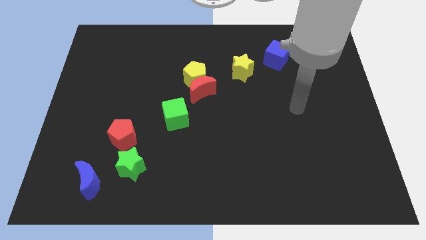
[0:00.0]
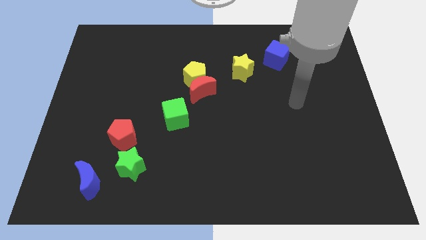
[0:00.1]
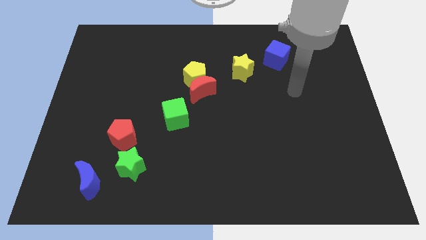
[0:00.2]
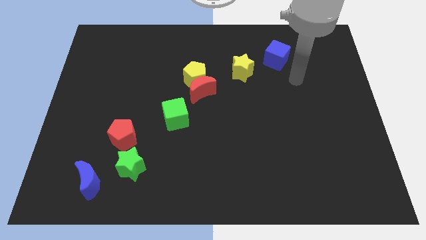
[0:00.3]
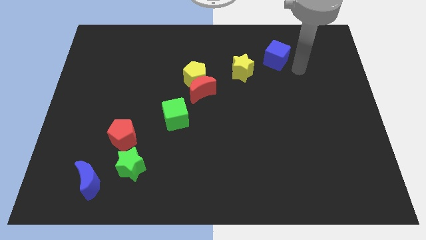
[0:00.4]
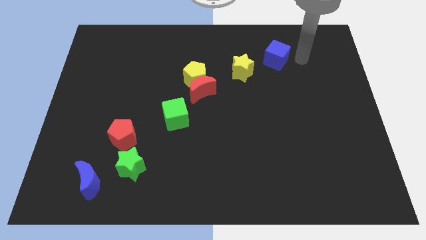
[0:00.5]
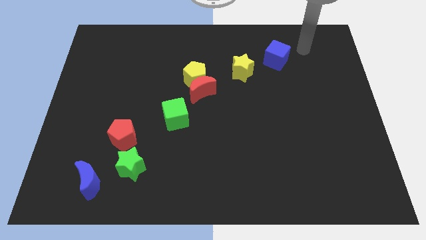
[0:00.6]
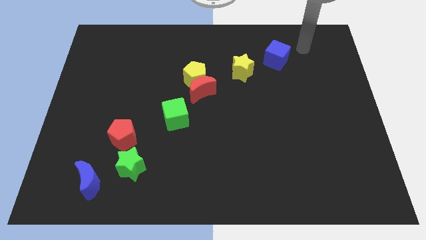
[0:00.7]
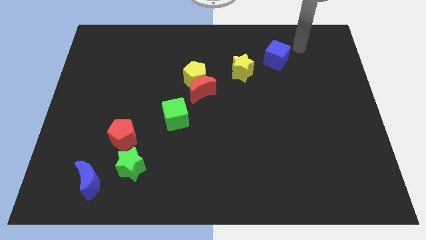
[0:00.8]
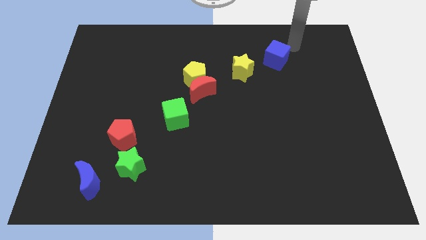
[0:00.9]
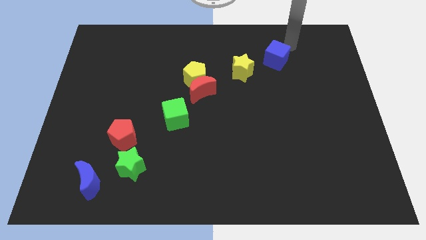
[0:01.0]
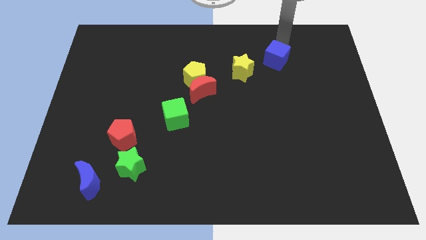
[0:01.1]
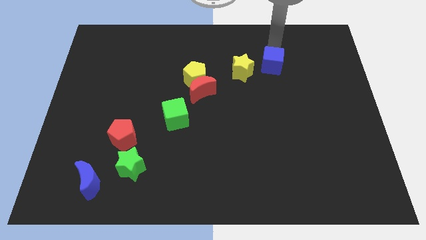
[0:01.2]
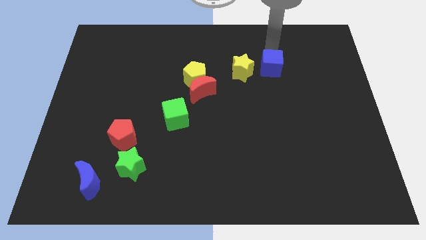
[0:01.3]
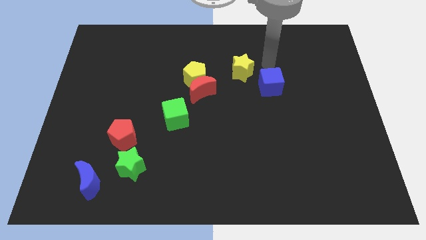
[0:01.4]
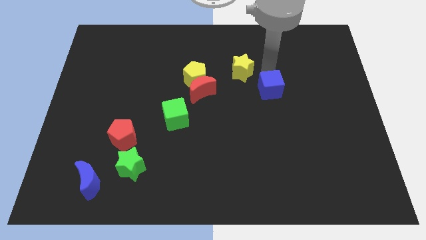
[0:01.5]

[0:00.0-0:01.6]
place the blue cube at the bottom right of the yellow star

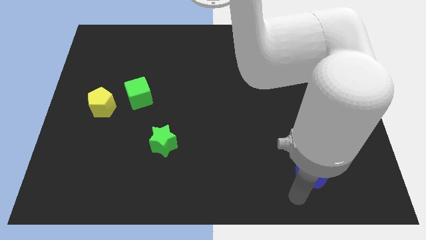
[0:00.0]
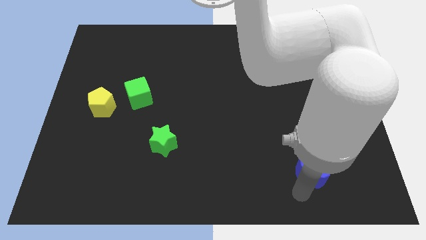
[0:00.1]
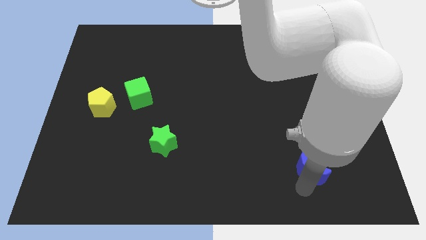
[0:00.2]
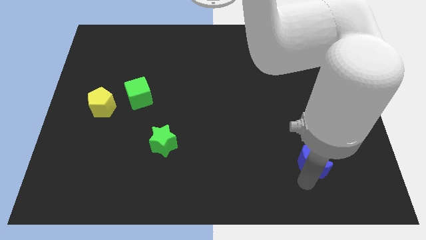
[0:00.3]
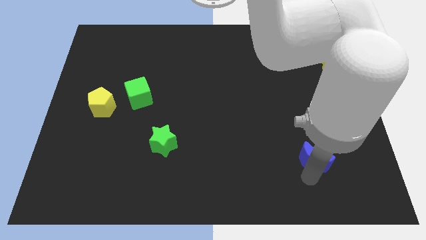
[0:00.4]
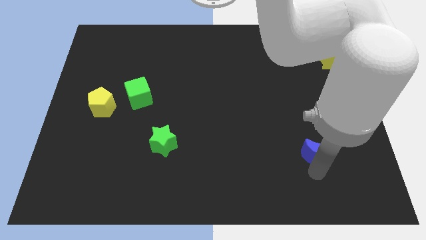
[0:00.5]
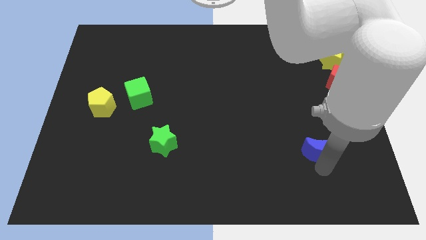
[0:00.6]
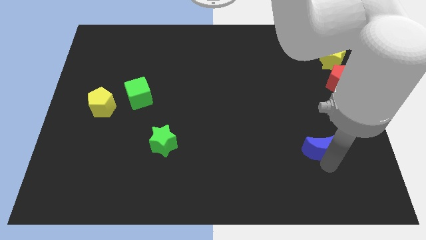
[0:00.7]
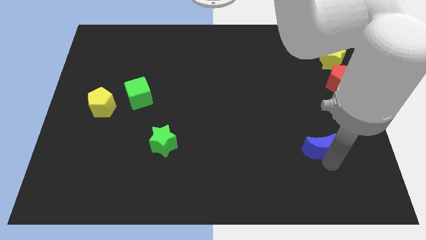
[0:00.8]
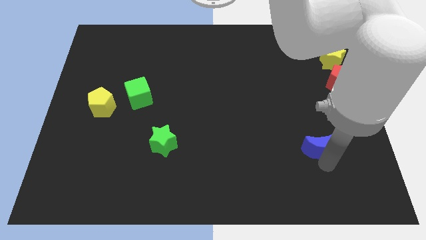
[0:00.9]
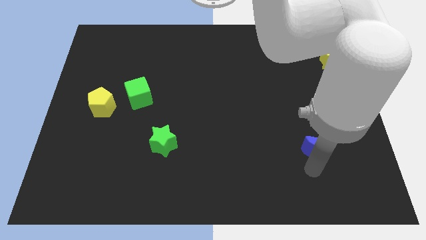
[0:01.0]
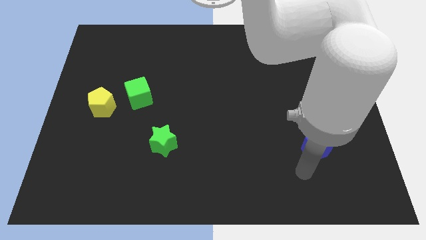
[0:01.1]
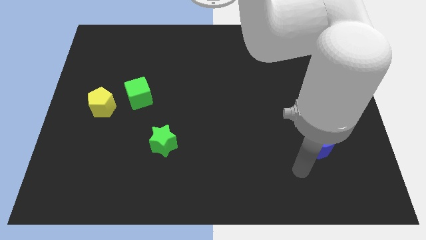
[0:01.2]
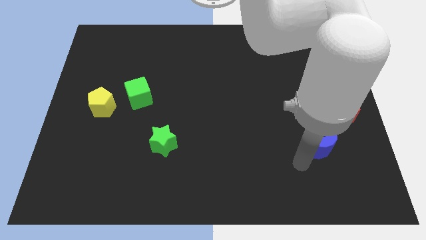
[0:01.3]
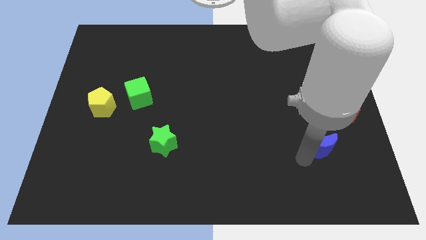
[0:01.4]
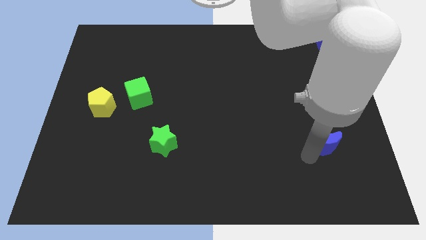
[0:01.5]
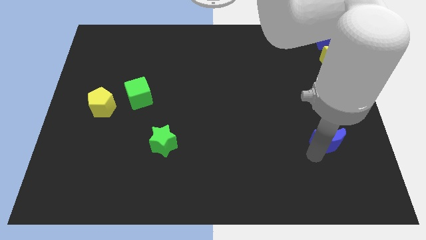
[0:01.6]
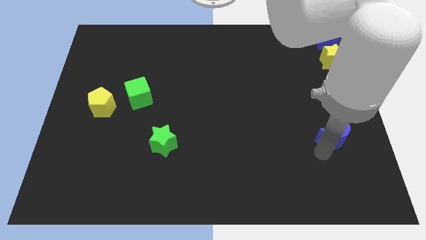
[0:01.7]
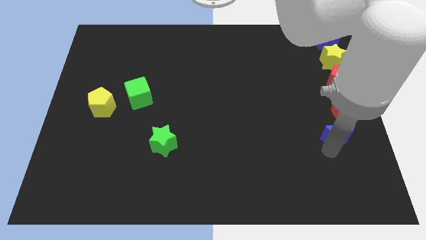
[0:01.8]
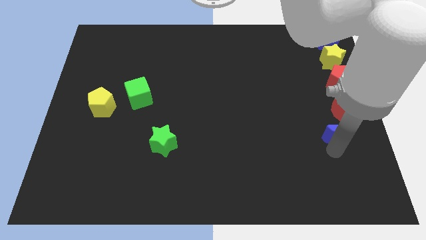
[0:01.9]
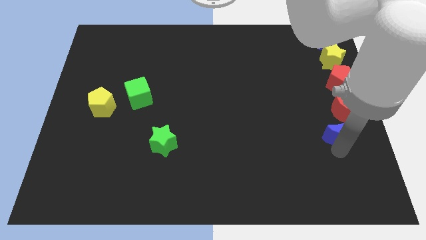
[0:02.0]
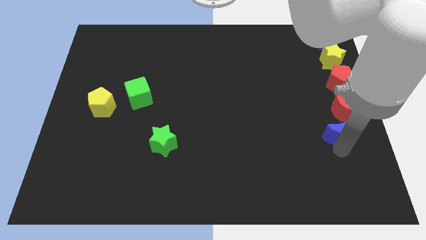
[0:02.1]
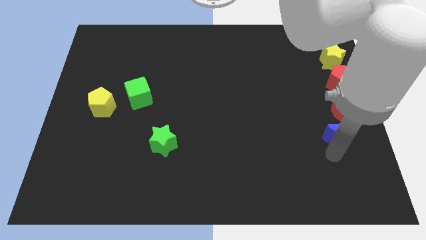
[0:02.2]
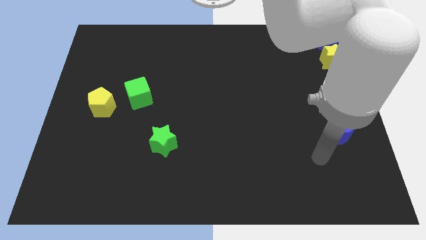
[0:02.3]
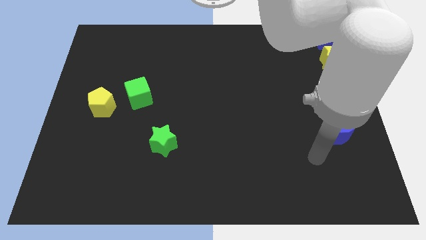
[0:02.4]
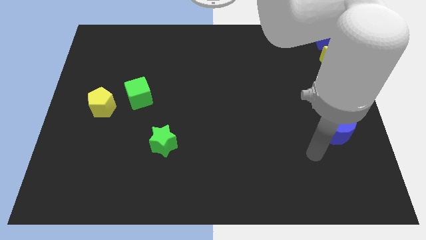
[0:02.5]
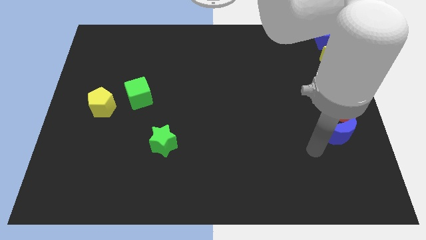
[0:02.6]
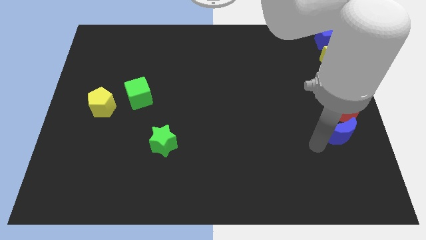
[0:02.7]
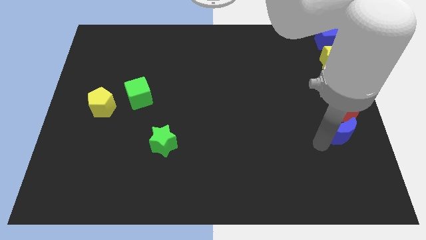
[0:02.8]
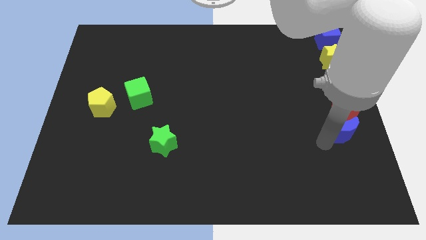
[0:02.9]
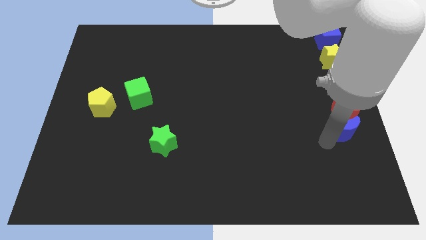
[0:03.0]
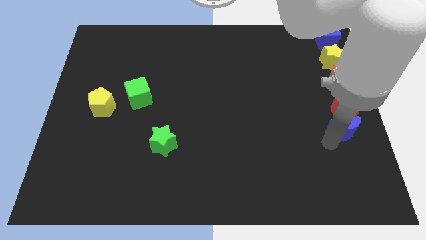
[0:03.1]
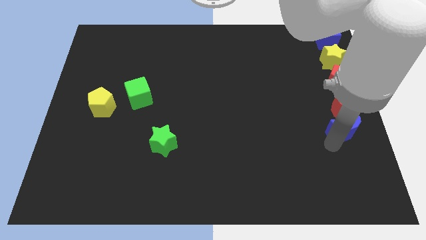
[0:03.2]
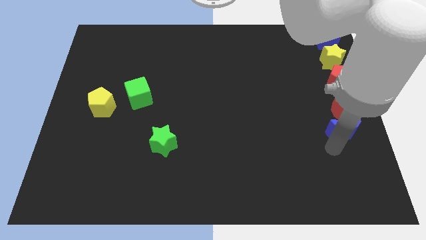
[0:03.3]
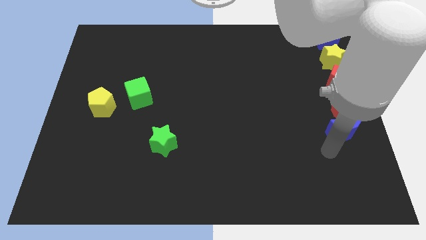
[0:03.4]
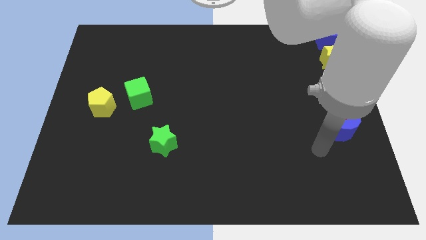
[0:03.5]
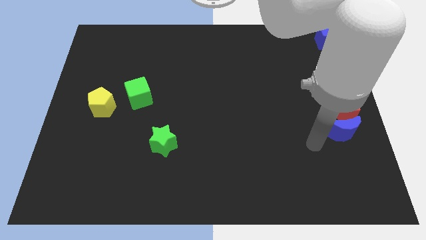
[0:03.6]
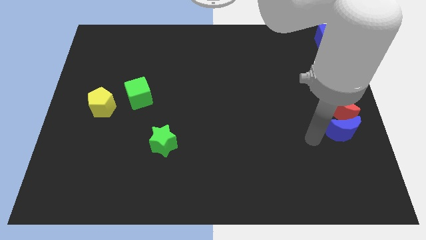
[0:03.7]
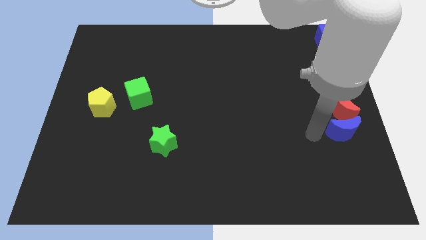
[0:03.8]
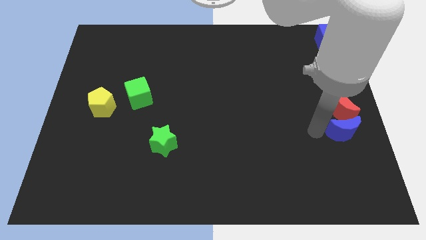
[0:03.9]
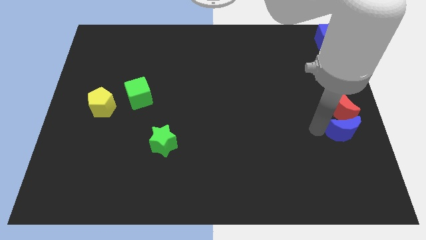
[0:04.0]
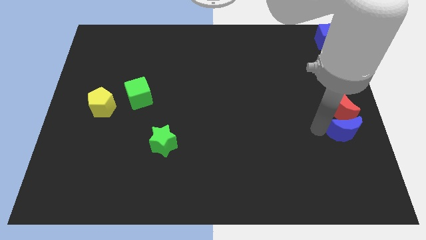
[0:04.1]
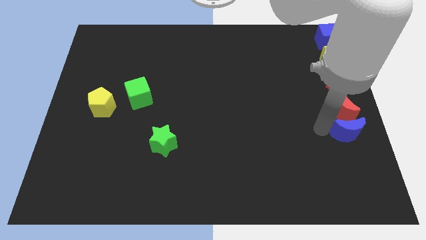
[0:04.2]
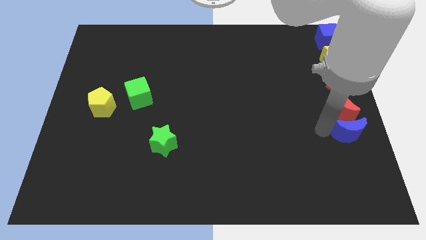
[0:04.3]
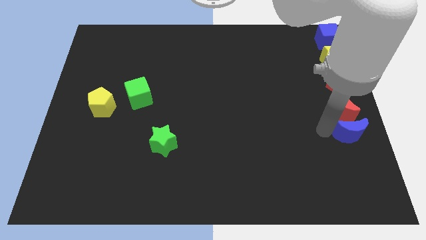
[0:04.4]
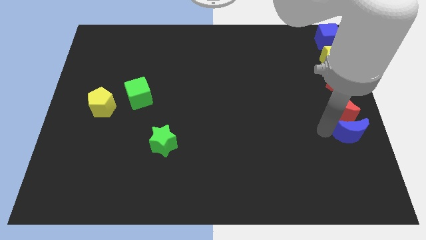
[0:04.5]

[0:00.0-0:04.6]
put the blue moon vertically below the red crescent

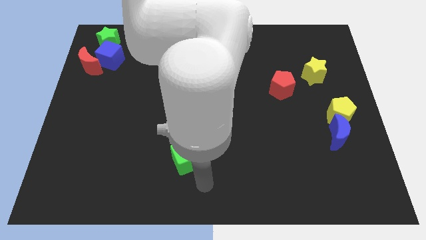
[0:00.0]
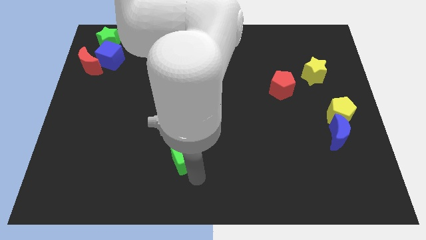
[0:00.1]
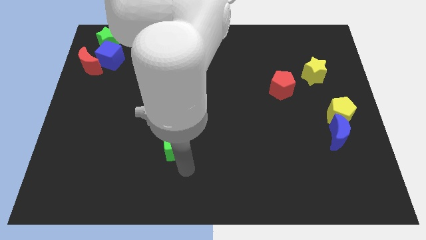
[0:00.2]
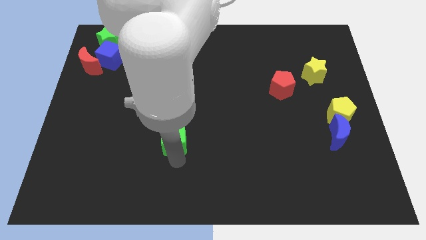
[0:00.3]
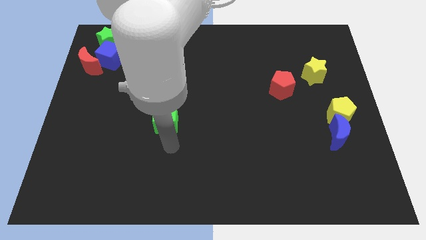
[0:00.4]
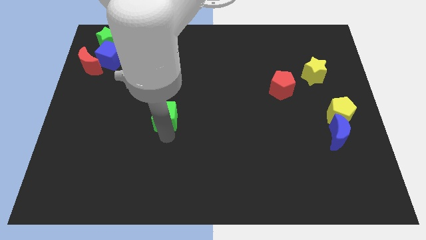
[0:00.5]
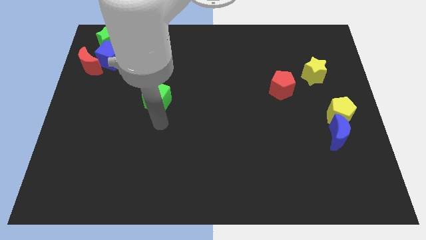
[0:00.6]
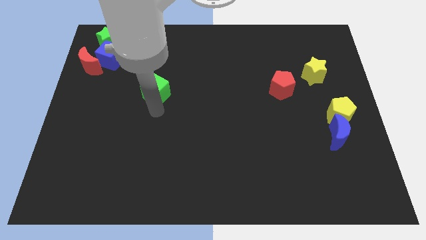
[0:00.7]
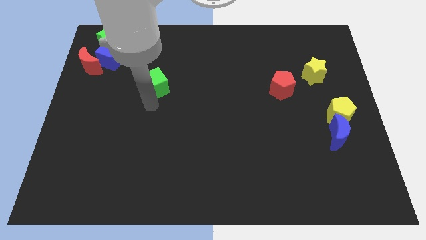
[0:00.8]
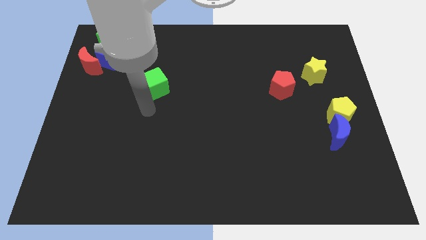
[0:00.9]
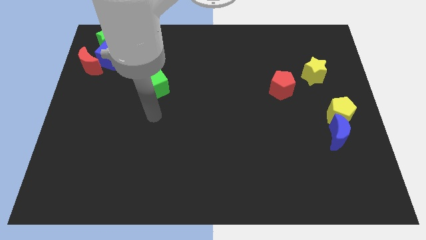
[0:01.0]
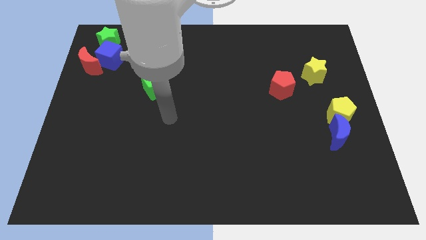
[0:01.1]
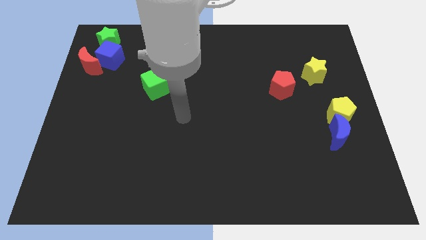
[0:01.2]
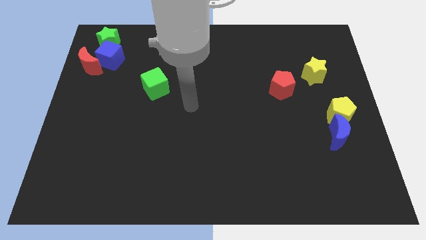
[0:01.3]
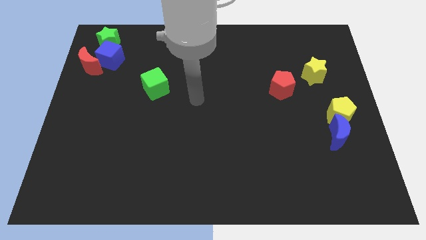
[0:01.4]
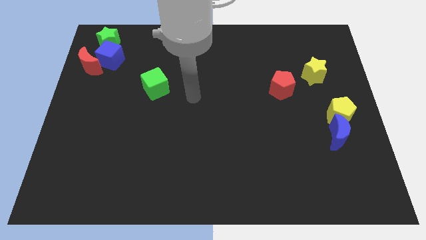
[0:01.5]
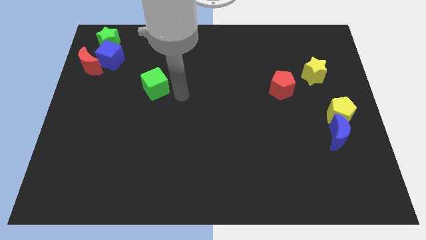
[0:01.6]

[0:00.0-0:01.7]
slightly push the green cube towards the top left of the board

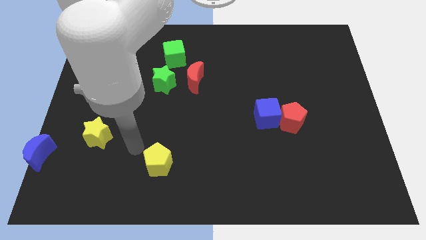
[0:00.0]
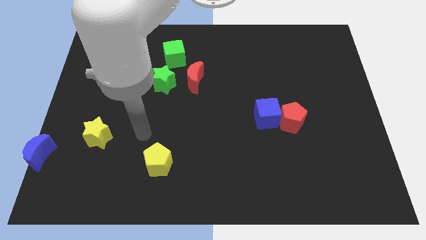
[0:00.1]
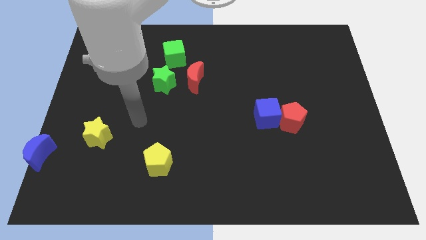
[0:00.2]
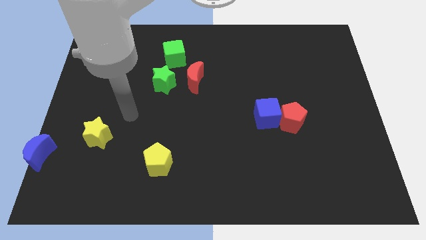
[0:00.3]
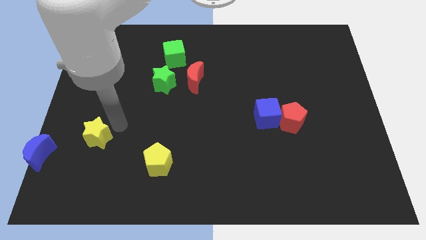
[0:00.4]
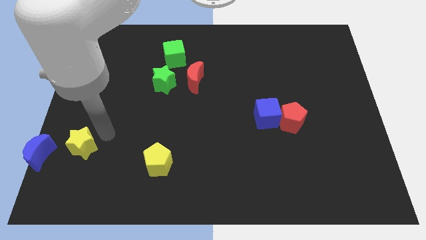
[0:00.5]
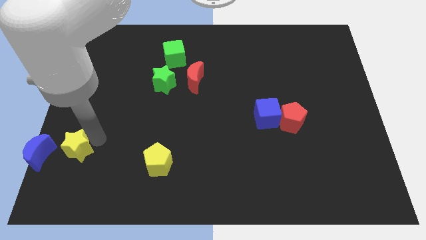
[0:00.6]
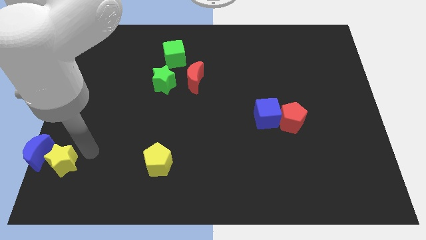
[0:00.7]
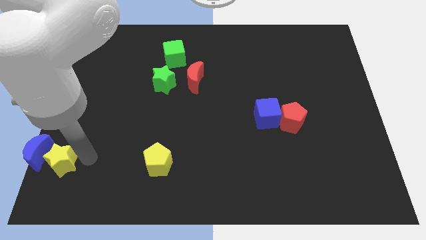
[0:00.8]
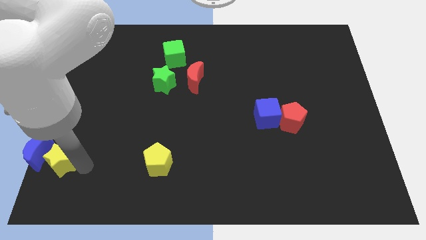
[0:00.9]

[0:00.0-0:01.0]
move yellow star right beside the blue moon
